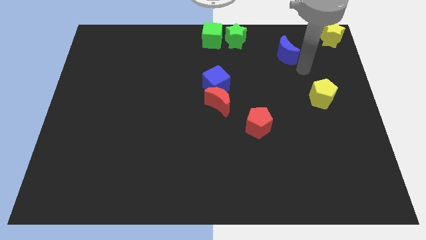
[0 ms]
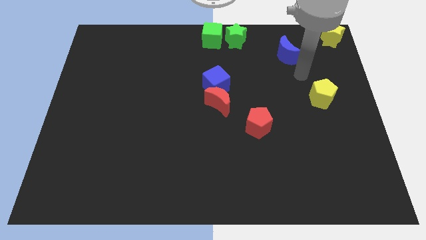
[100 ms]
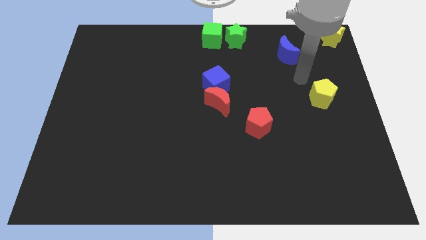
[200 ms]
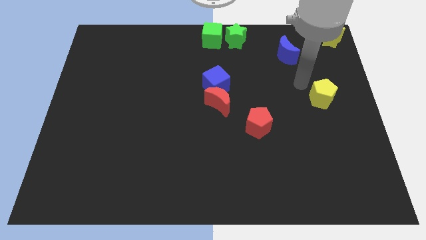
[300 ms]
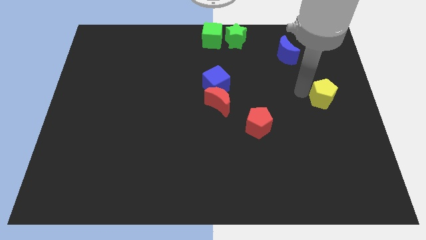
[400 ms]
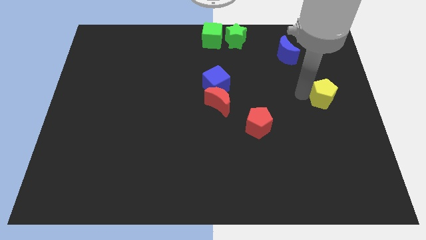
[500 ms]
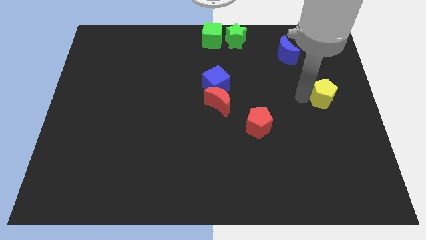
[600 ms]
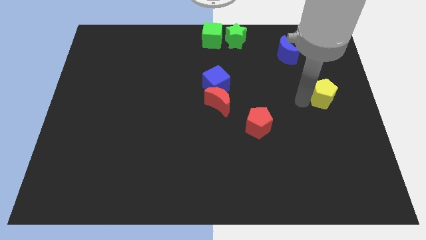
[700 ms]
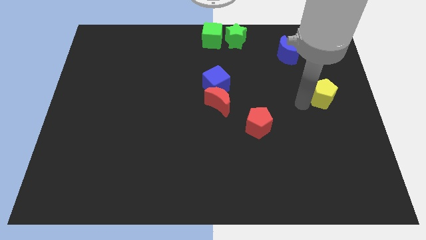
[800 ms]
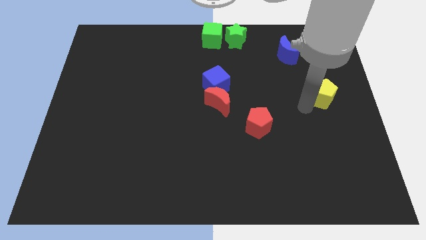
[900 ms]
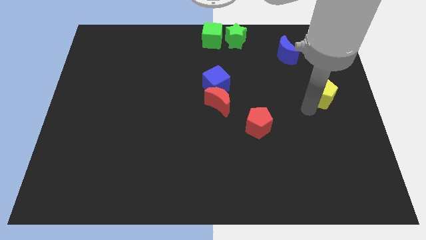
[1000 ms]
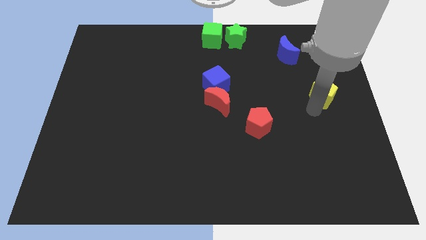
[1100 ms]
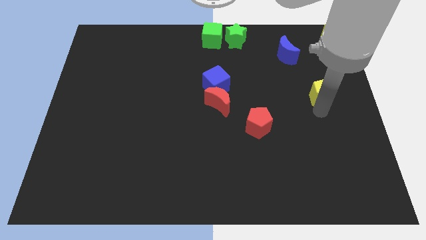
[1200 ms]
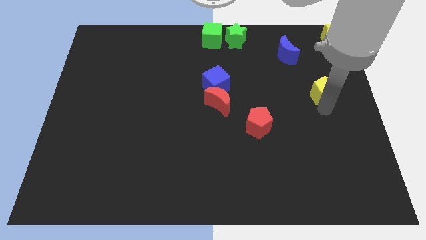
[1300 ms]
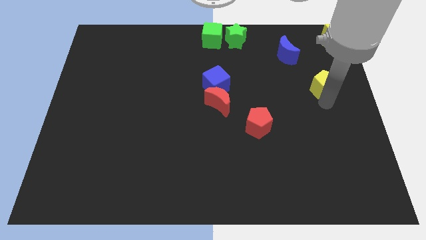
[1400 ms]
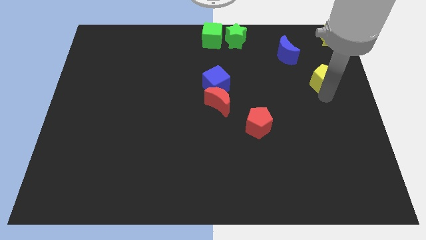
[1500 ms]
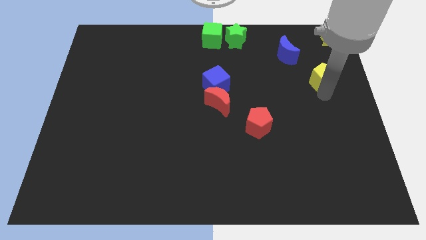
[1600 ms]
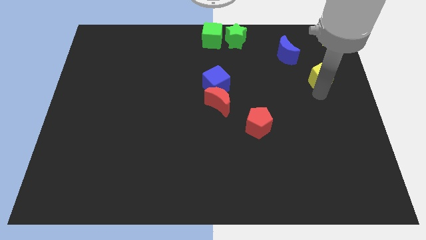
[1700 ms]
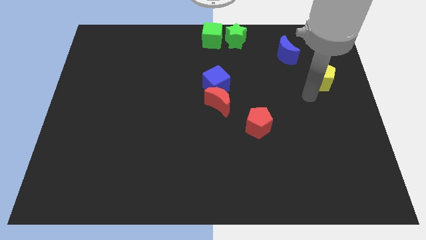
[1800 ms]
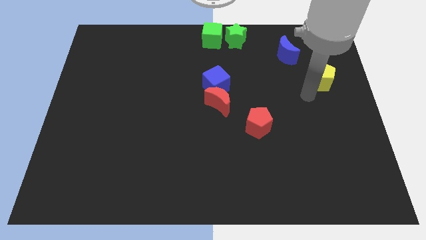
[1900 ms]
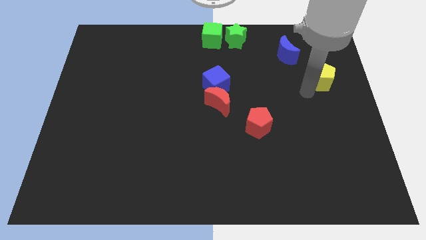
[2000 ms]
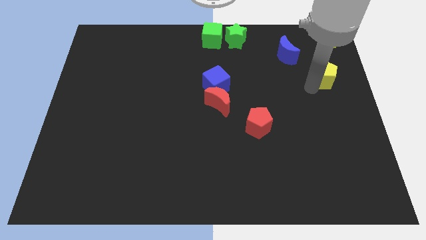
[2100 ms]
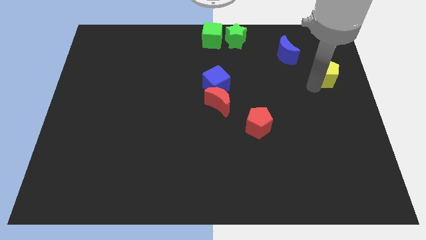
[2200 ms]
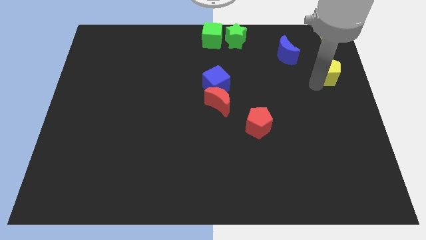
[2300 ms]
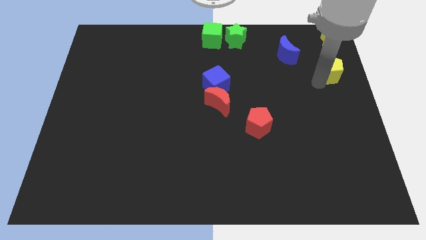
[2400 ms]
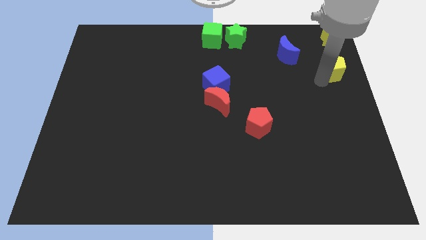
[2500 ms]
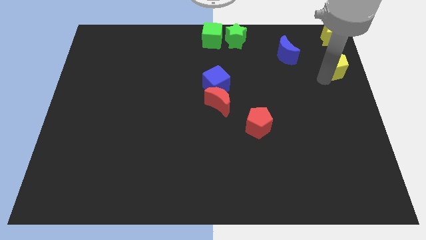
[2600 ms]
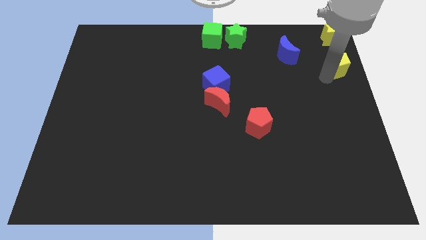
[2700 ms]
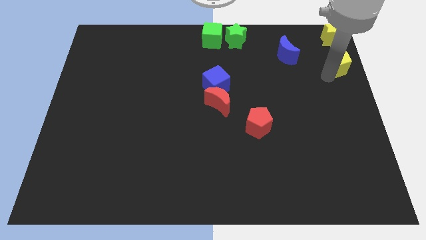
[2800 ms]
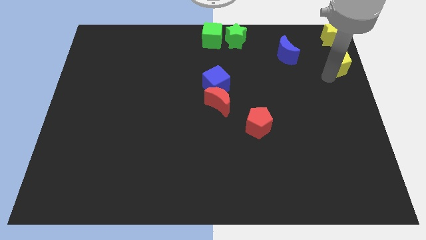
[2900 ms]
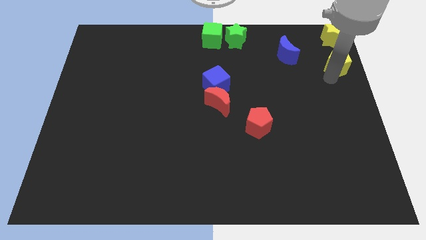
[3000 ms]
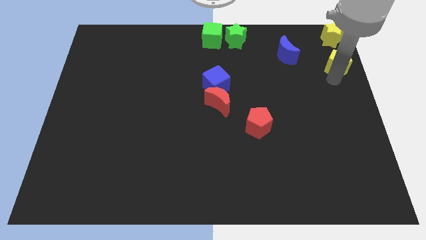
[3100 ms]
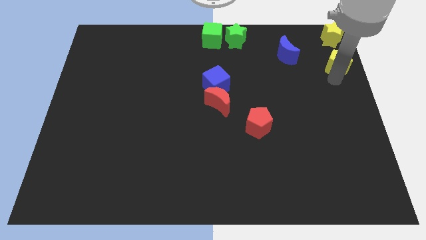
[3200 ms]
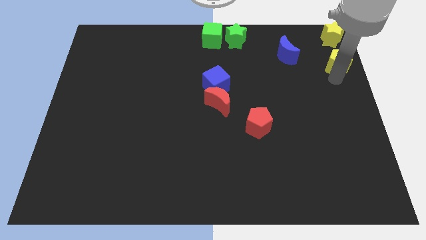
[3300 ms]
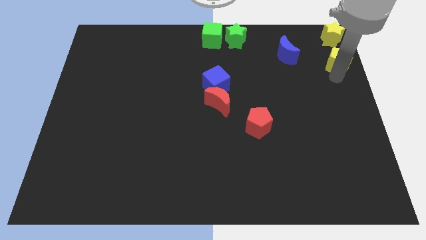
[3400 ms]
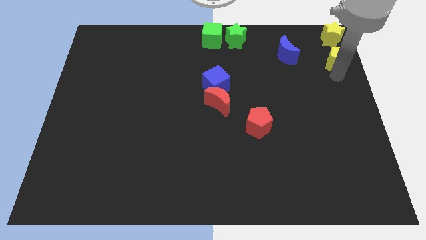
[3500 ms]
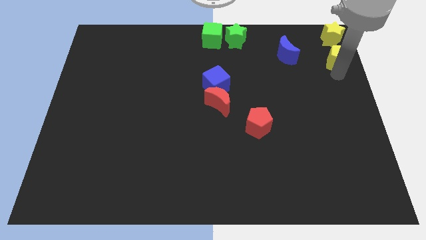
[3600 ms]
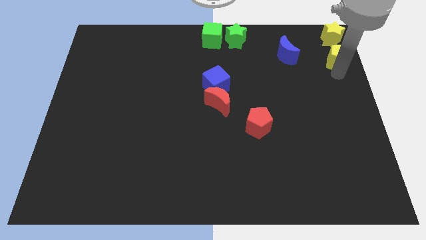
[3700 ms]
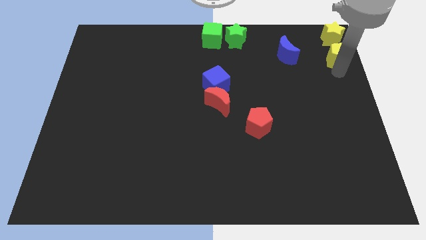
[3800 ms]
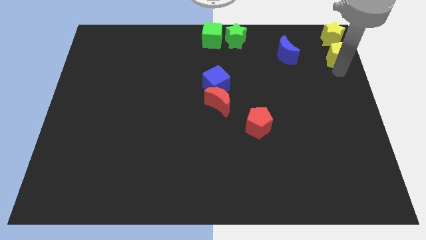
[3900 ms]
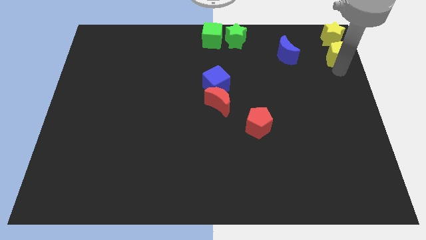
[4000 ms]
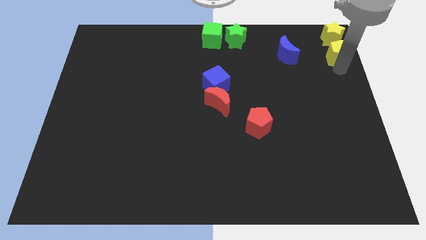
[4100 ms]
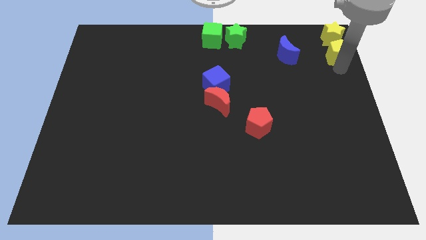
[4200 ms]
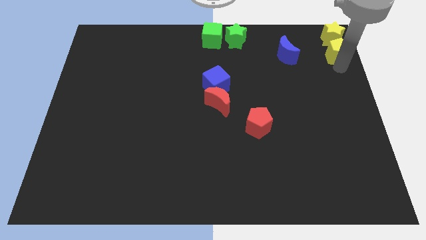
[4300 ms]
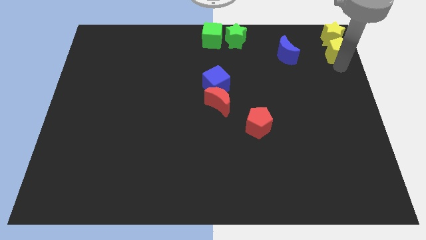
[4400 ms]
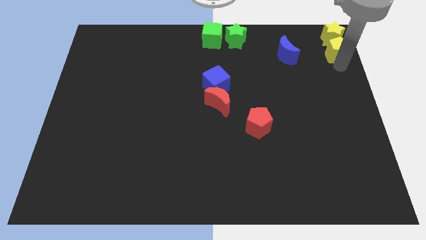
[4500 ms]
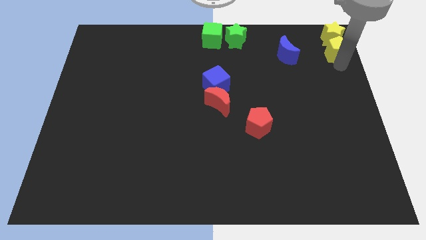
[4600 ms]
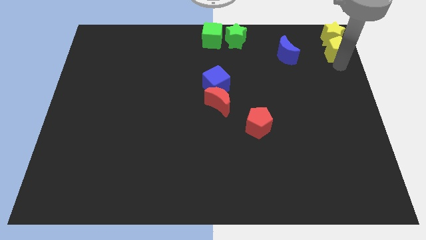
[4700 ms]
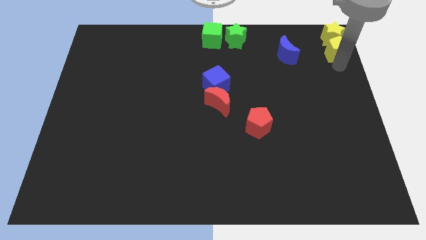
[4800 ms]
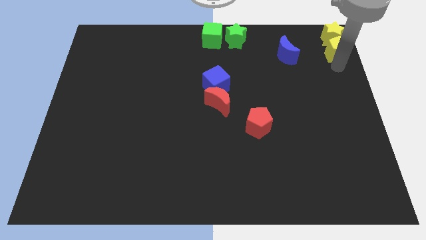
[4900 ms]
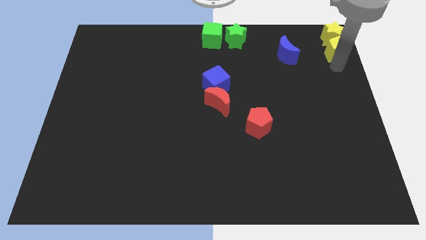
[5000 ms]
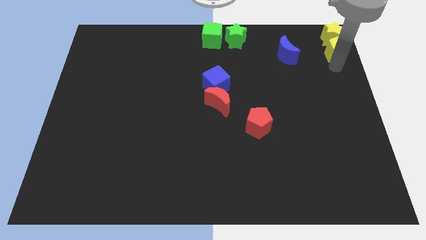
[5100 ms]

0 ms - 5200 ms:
drag yellow pentagon below yellow star

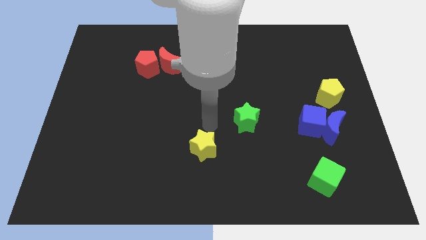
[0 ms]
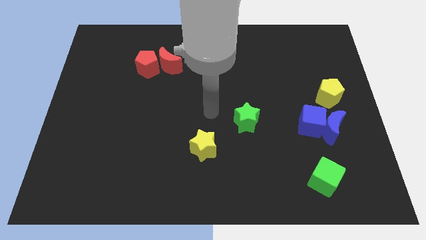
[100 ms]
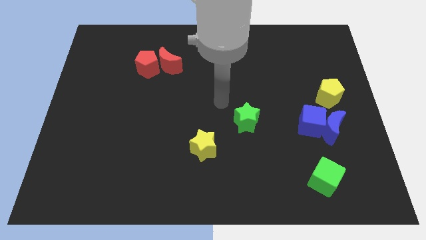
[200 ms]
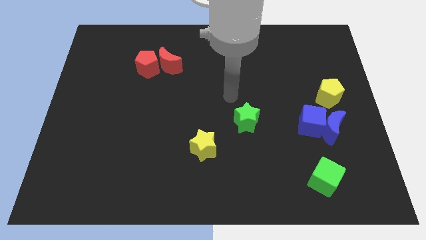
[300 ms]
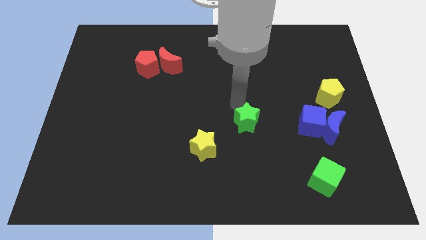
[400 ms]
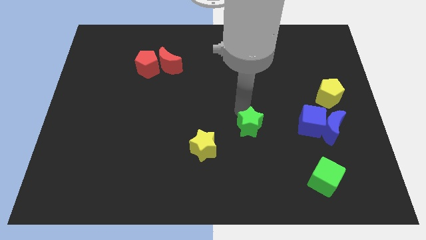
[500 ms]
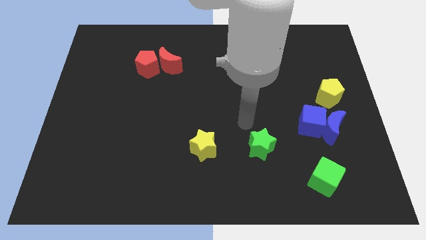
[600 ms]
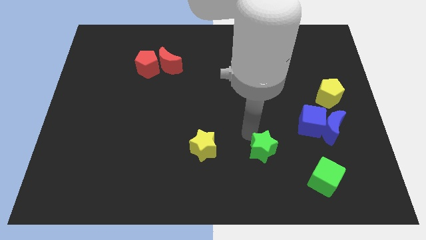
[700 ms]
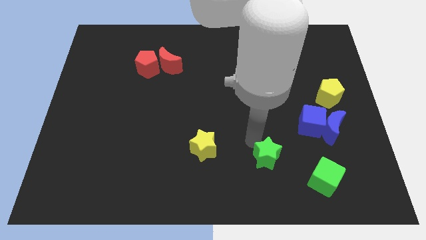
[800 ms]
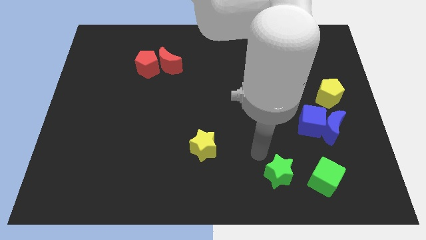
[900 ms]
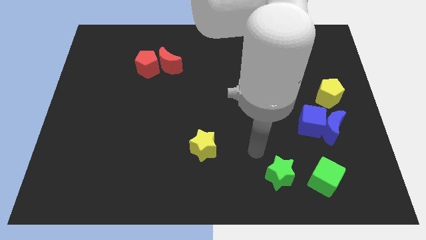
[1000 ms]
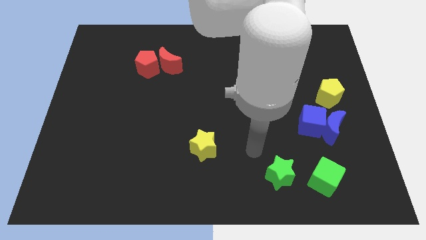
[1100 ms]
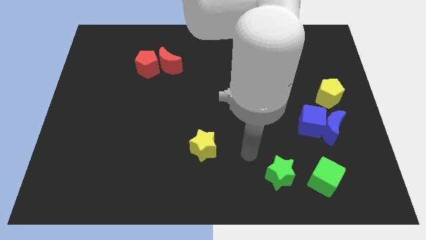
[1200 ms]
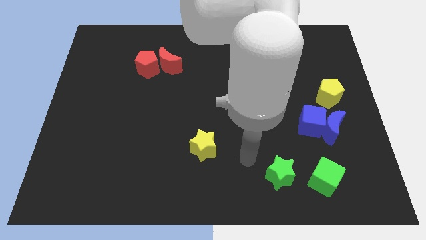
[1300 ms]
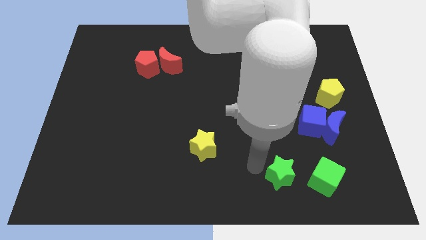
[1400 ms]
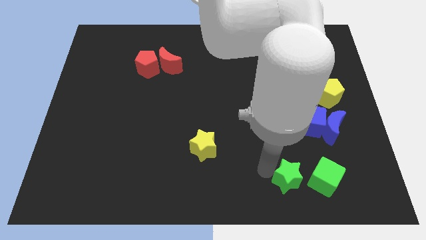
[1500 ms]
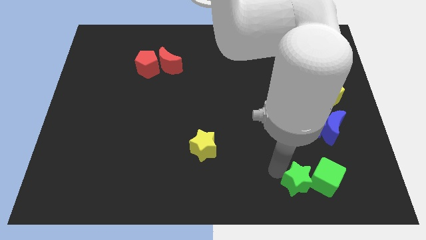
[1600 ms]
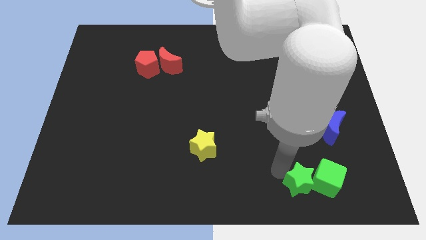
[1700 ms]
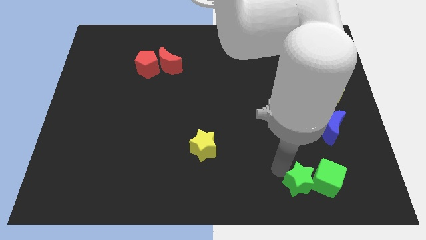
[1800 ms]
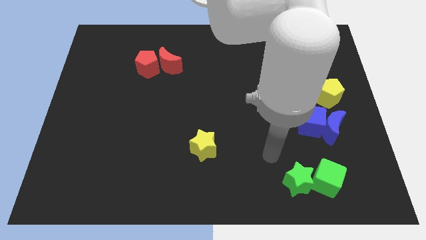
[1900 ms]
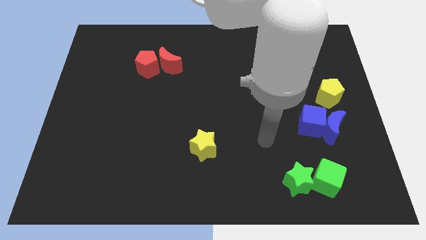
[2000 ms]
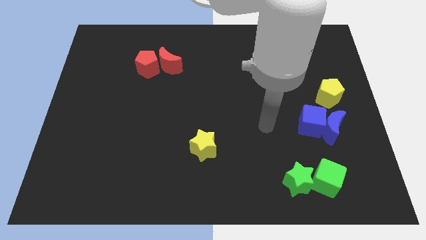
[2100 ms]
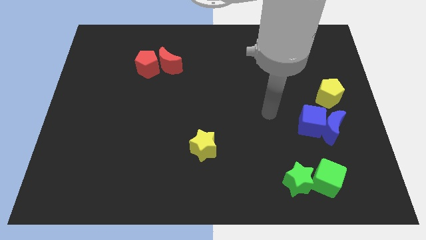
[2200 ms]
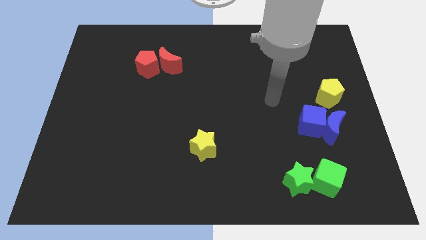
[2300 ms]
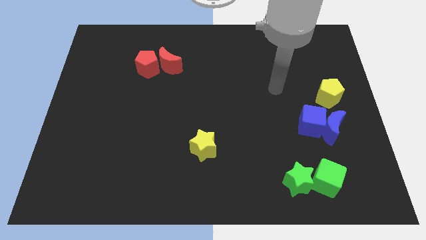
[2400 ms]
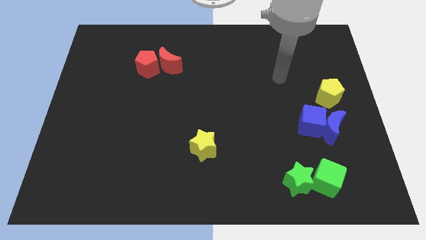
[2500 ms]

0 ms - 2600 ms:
move the green star close to the green cube

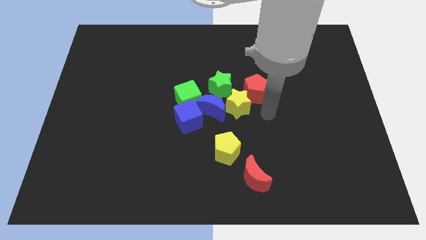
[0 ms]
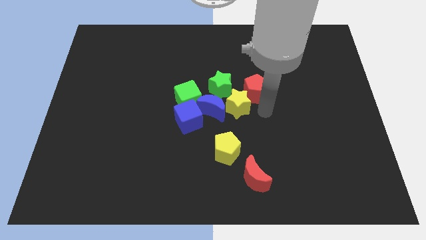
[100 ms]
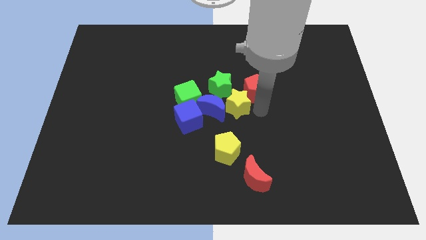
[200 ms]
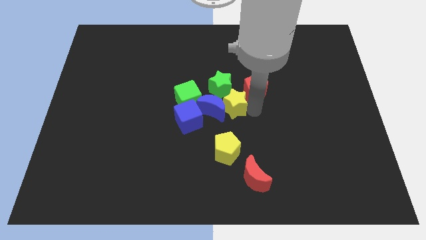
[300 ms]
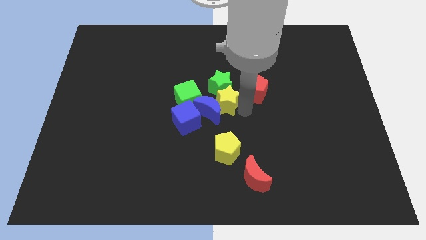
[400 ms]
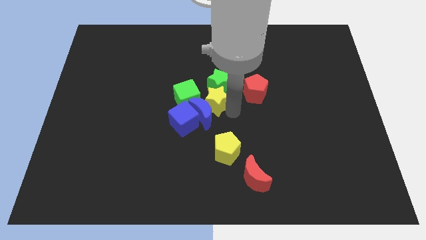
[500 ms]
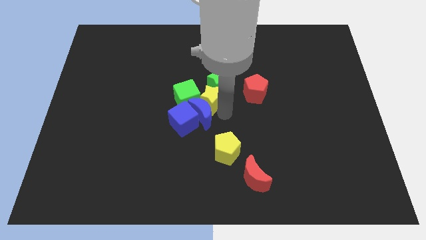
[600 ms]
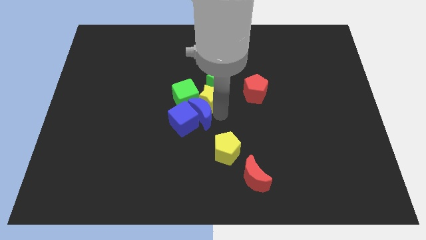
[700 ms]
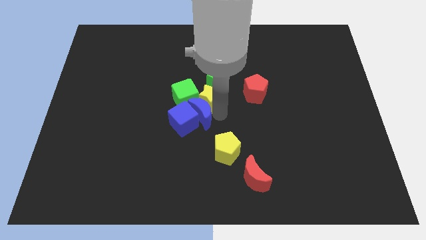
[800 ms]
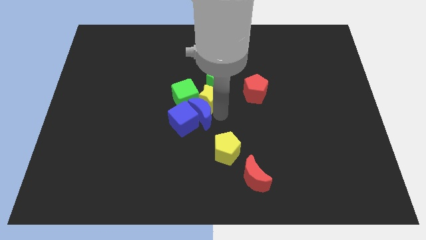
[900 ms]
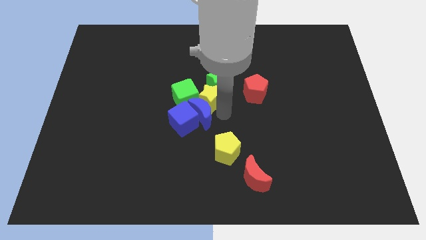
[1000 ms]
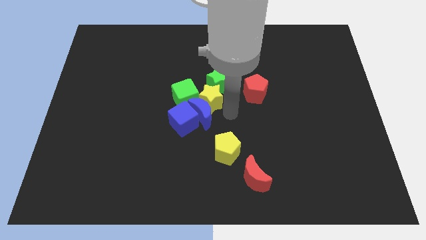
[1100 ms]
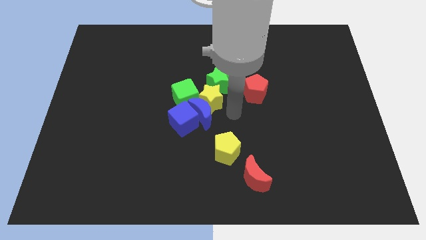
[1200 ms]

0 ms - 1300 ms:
move the yellow star into the green cube

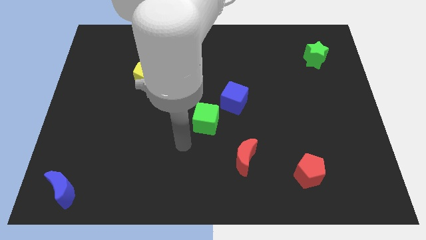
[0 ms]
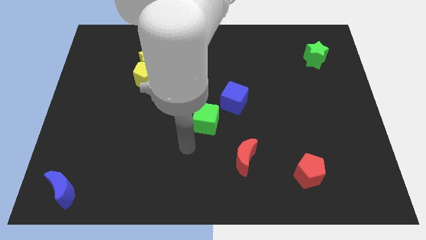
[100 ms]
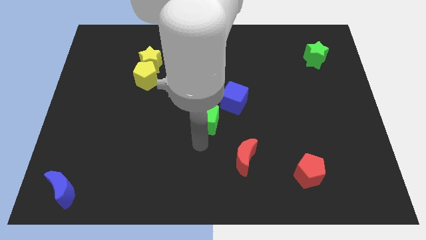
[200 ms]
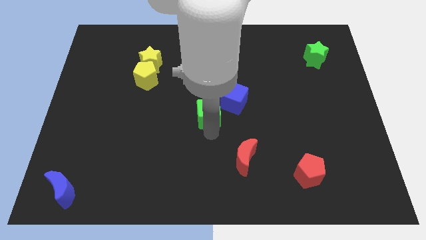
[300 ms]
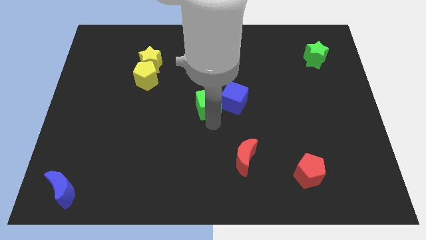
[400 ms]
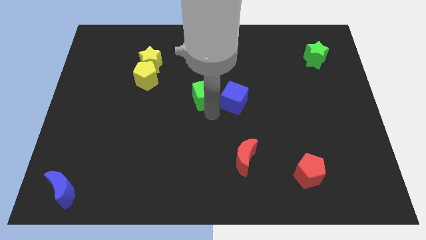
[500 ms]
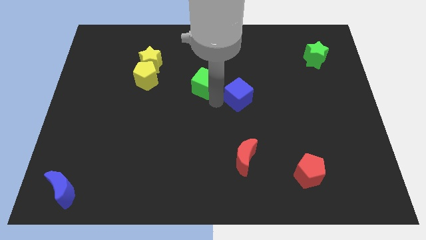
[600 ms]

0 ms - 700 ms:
push the green cube to the center of the board
